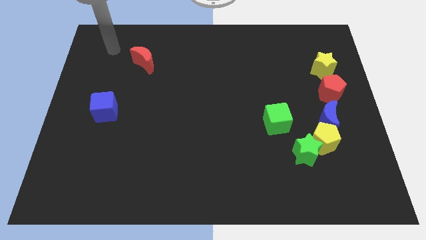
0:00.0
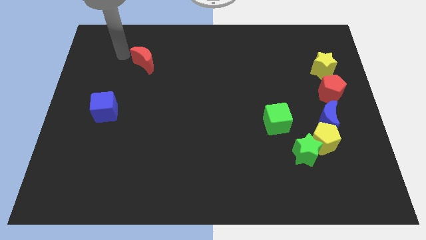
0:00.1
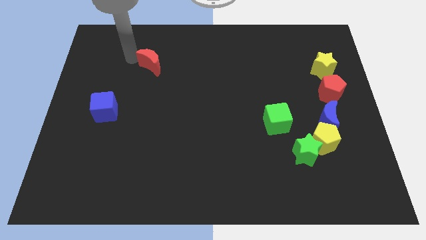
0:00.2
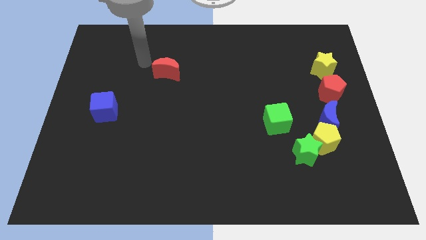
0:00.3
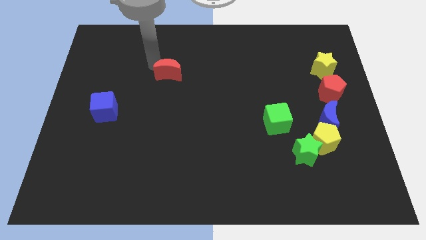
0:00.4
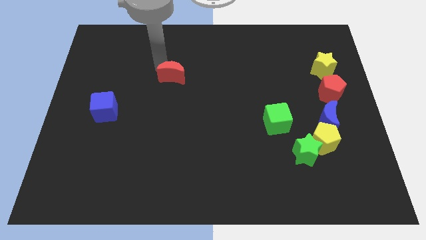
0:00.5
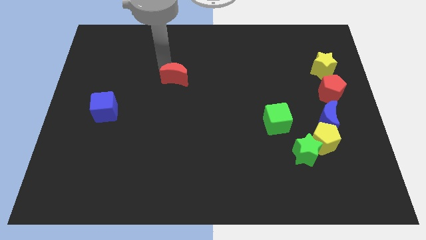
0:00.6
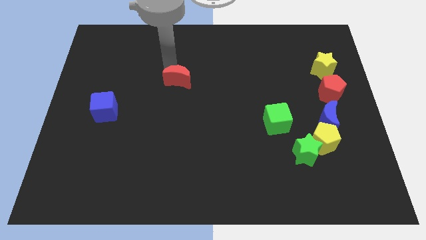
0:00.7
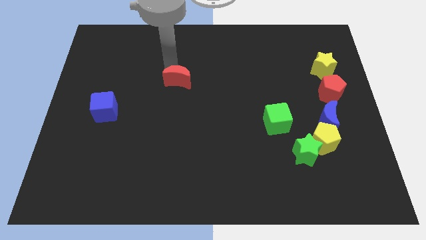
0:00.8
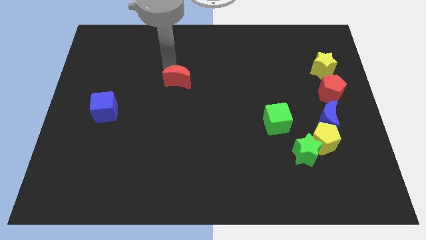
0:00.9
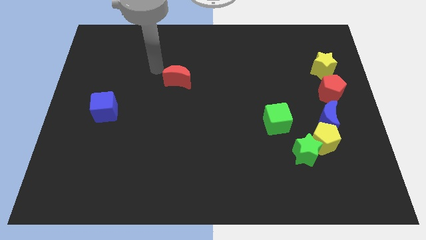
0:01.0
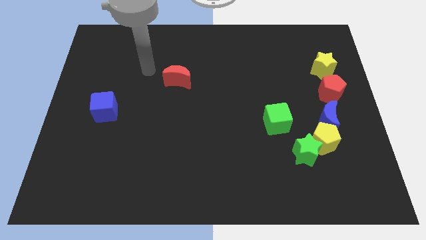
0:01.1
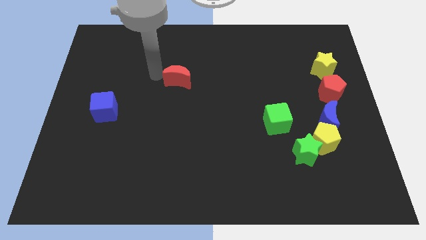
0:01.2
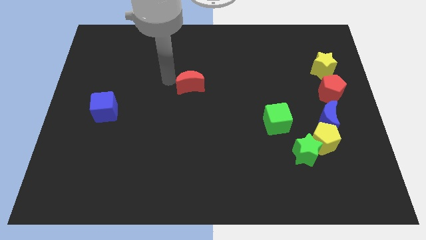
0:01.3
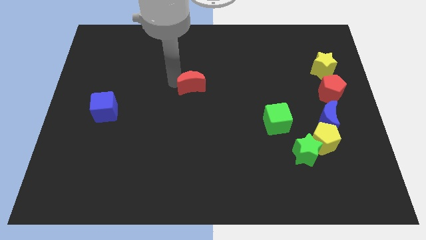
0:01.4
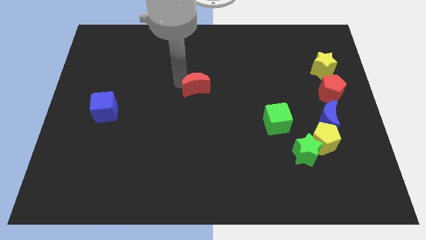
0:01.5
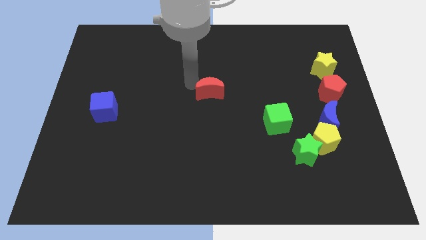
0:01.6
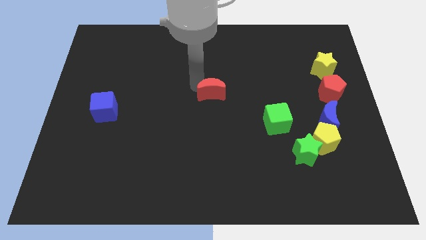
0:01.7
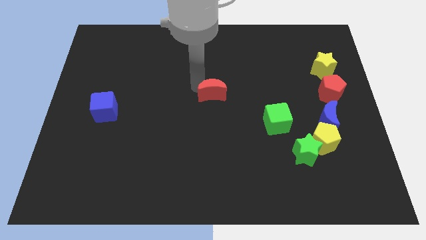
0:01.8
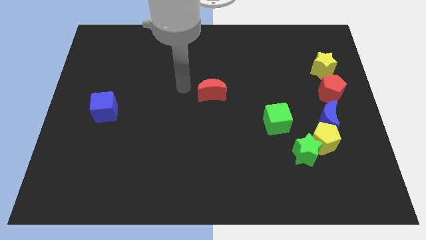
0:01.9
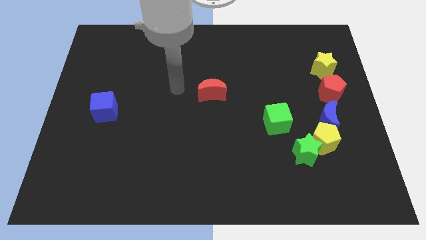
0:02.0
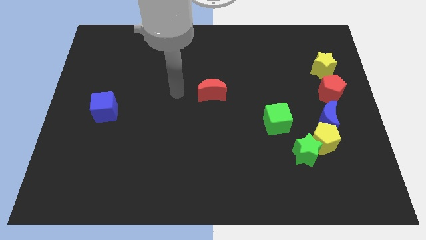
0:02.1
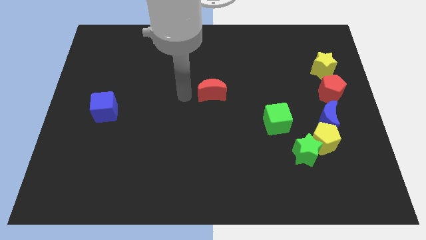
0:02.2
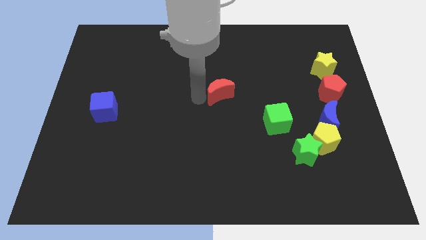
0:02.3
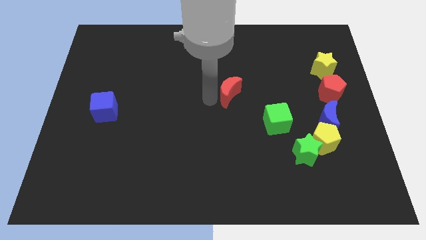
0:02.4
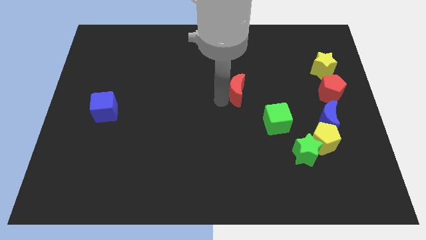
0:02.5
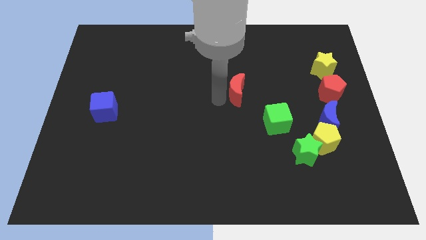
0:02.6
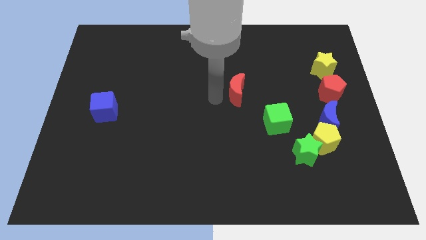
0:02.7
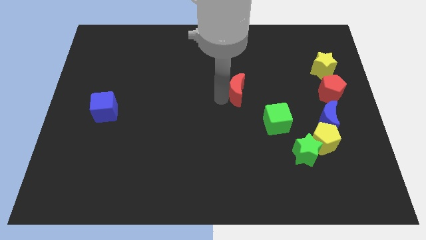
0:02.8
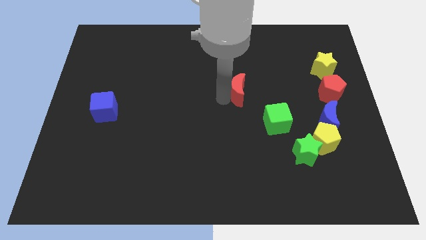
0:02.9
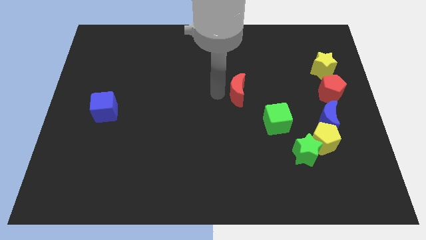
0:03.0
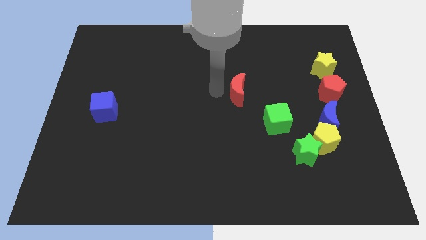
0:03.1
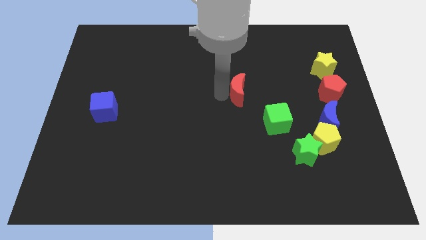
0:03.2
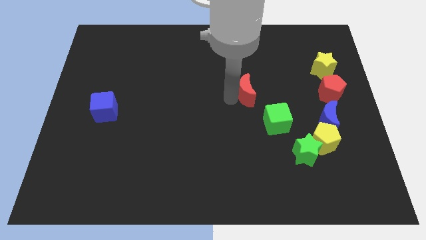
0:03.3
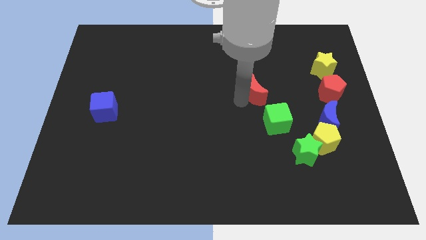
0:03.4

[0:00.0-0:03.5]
move red crescent towards the green cube

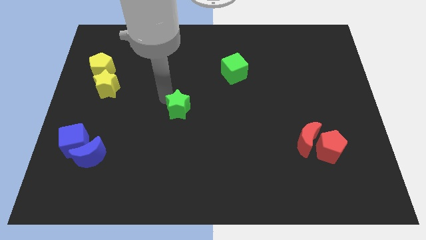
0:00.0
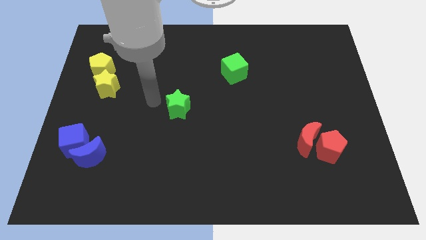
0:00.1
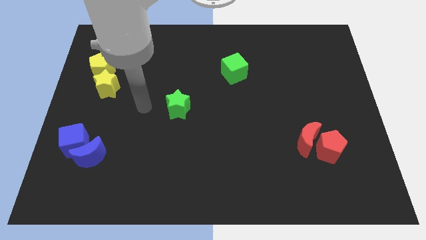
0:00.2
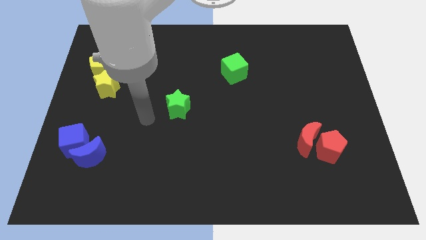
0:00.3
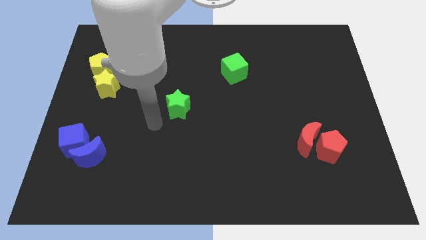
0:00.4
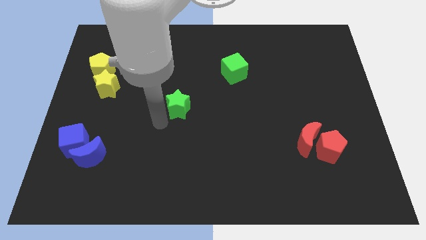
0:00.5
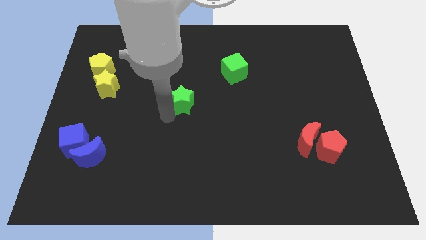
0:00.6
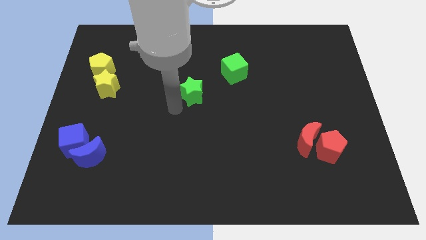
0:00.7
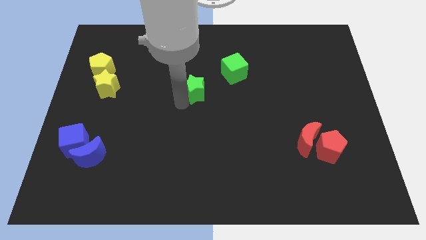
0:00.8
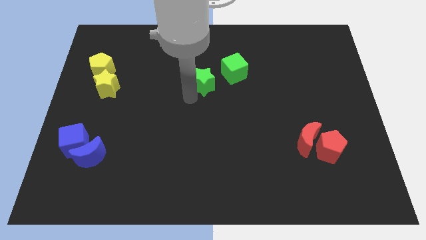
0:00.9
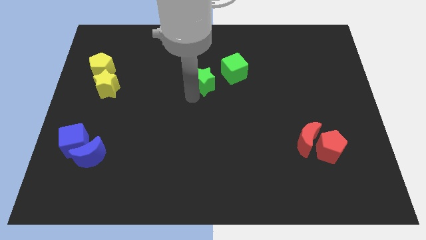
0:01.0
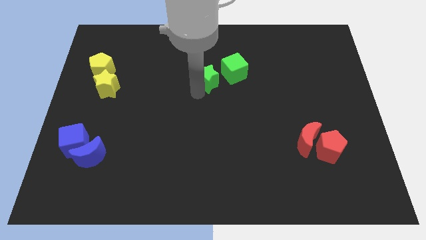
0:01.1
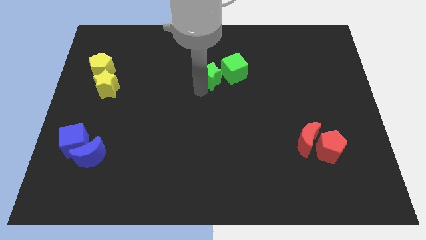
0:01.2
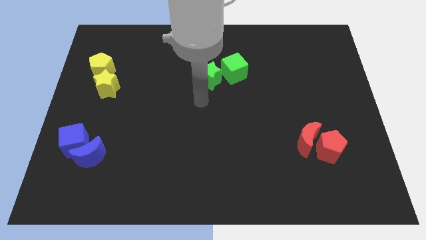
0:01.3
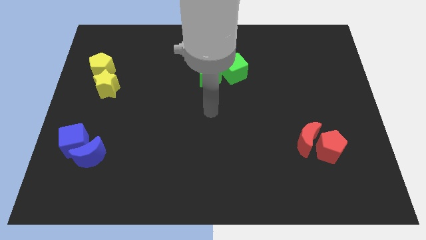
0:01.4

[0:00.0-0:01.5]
place the green star to the right side of the green cube

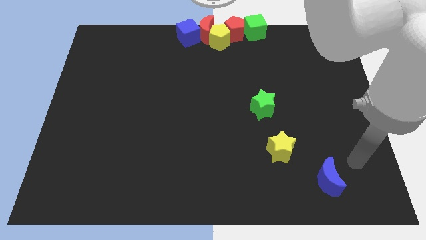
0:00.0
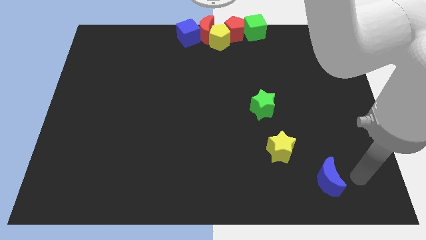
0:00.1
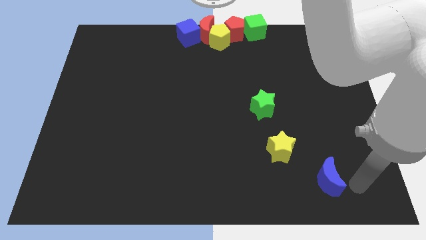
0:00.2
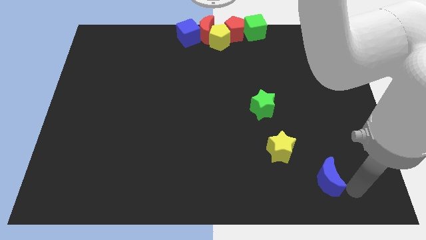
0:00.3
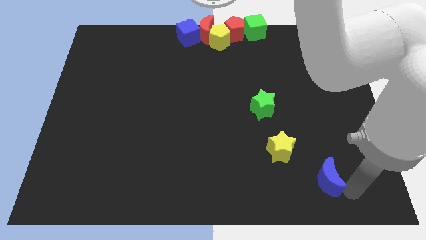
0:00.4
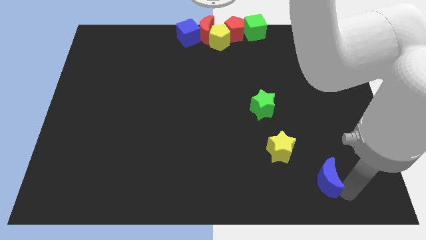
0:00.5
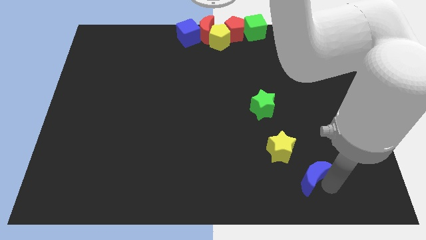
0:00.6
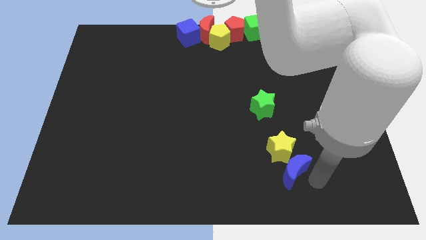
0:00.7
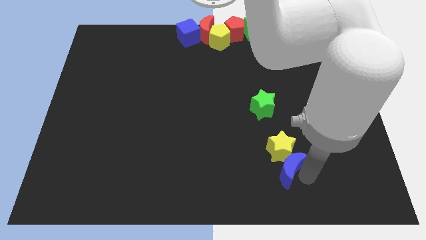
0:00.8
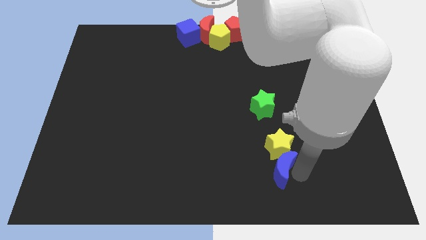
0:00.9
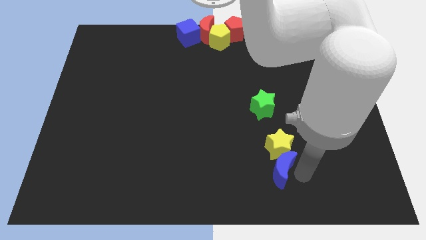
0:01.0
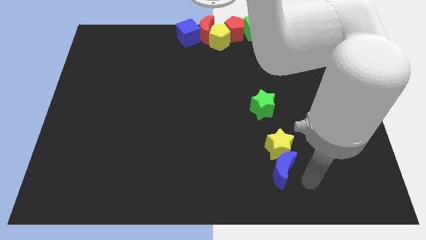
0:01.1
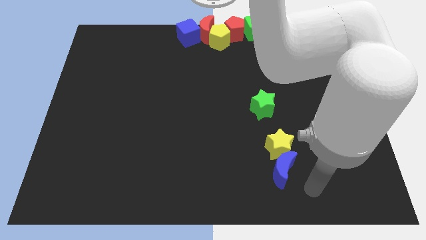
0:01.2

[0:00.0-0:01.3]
move the blue crescent below the yellow star

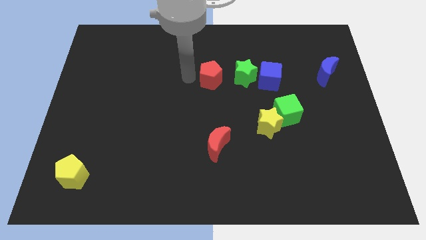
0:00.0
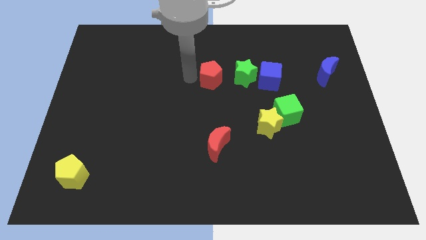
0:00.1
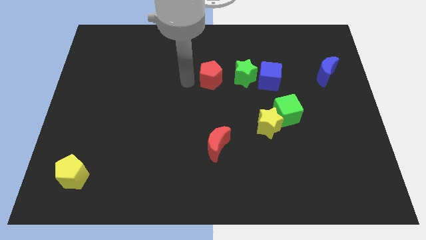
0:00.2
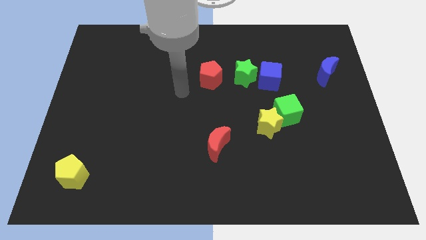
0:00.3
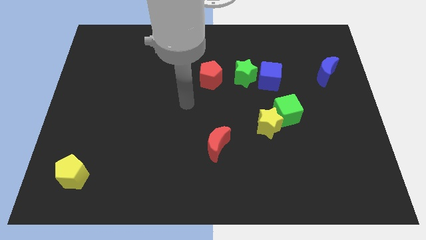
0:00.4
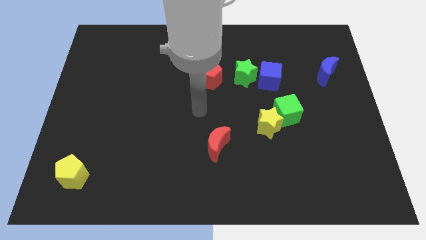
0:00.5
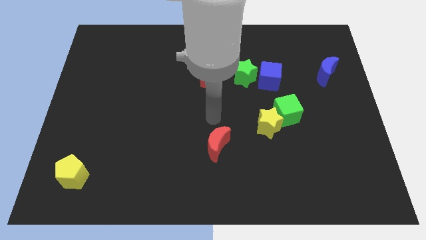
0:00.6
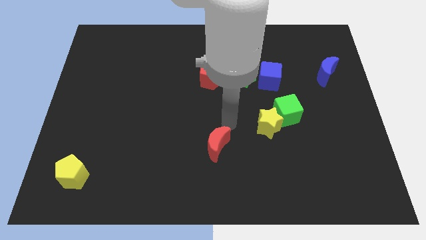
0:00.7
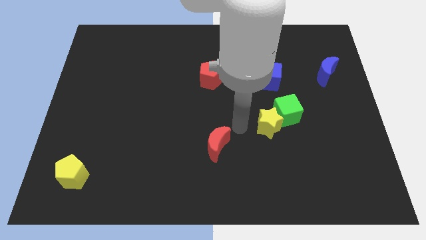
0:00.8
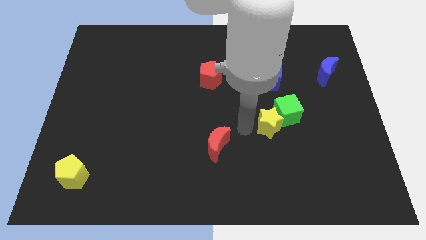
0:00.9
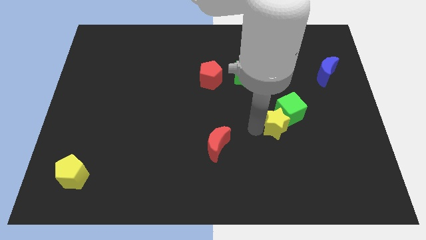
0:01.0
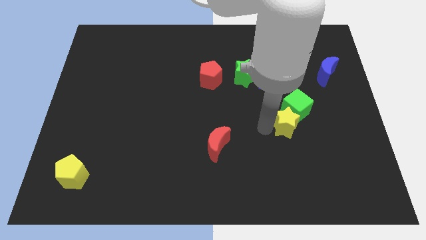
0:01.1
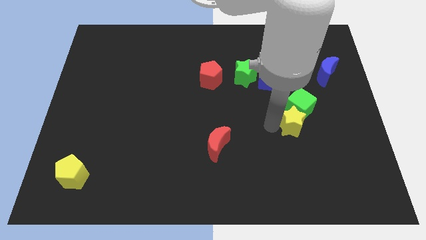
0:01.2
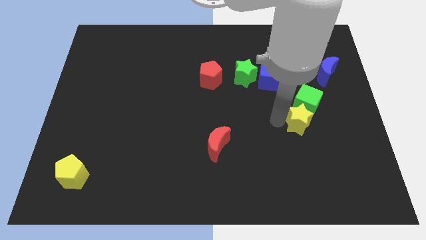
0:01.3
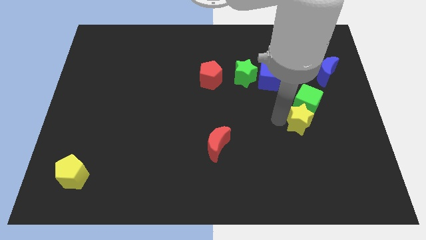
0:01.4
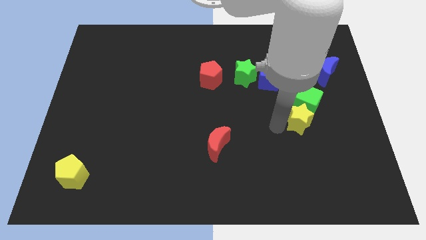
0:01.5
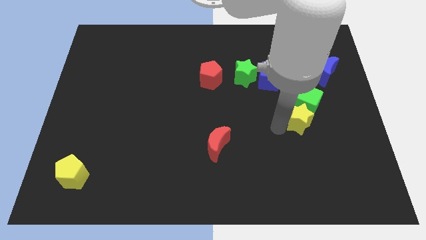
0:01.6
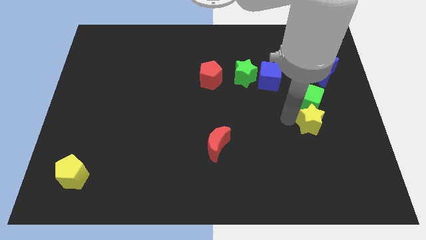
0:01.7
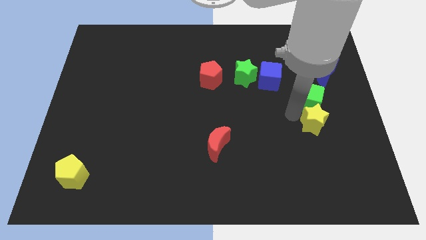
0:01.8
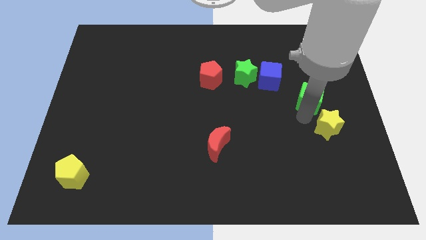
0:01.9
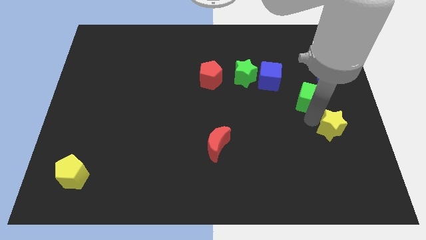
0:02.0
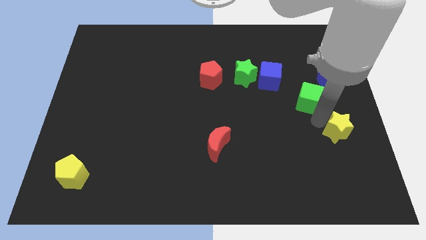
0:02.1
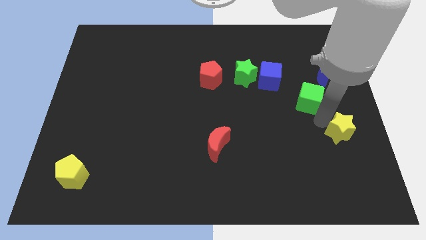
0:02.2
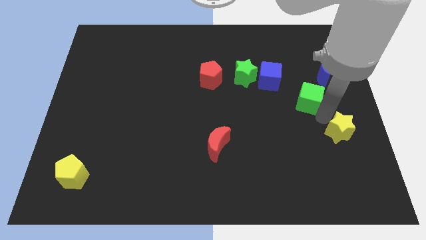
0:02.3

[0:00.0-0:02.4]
move the yellow star to the bottom right of the green cube

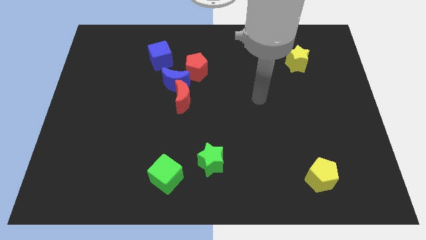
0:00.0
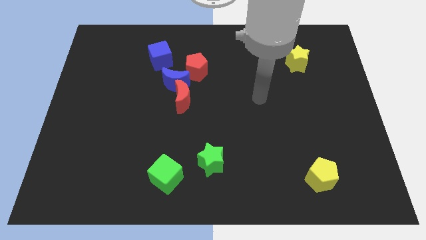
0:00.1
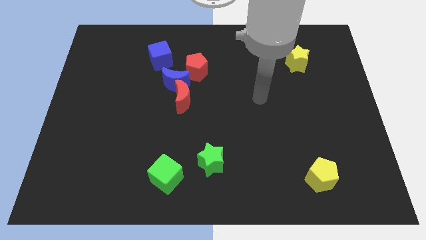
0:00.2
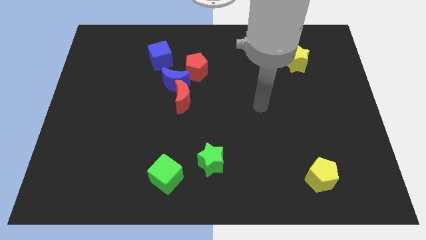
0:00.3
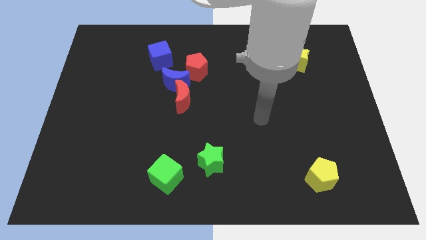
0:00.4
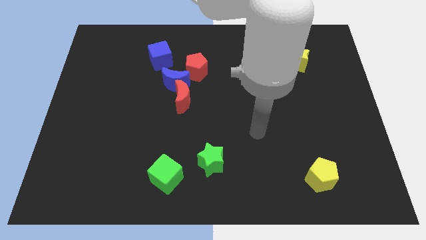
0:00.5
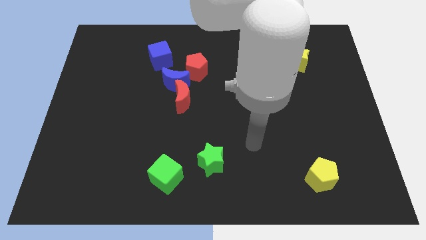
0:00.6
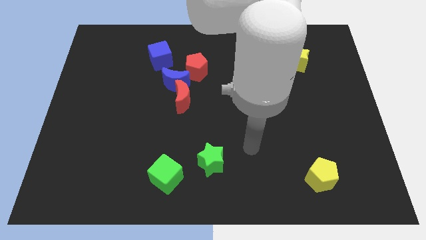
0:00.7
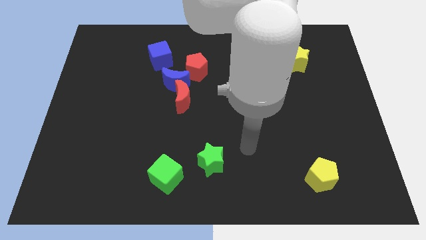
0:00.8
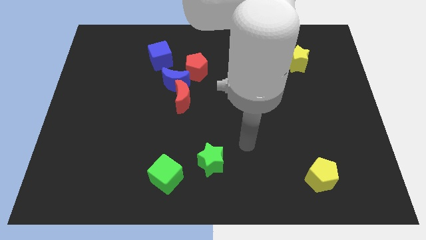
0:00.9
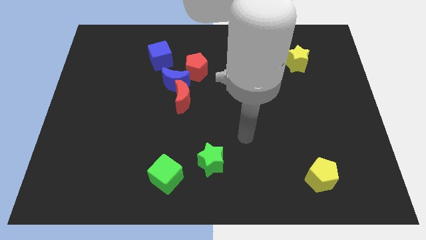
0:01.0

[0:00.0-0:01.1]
point your hand close to the green star
